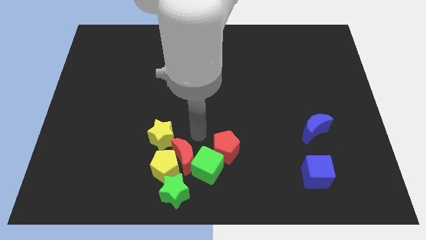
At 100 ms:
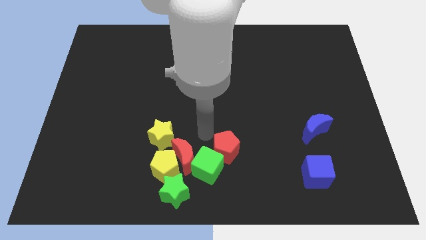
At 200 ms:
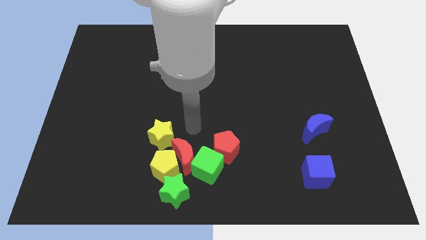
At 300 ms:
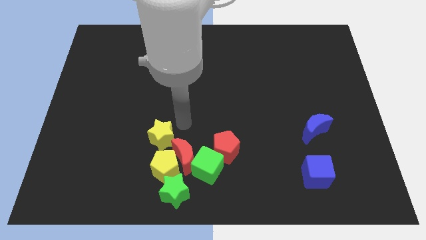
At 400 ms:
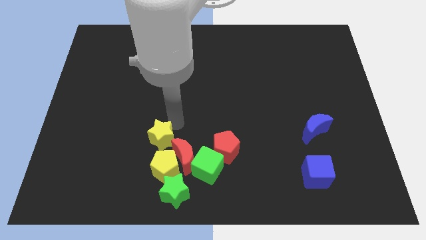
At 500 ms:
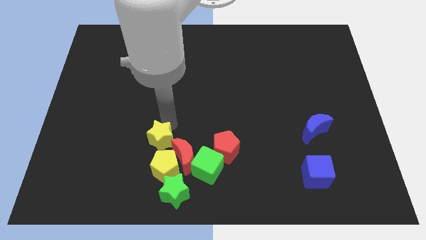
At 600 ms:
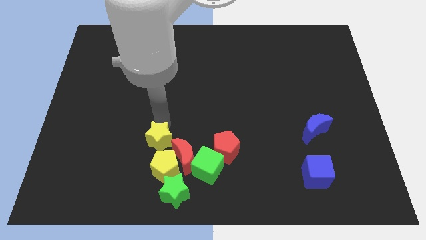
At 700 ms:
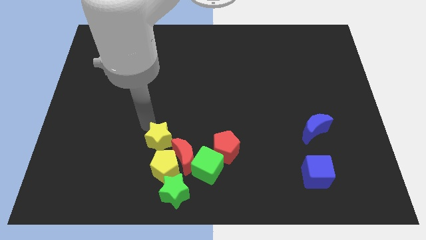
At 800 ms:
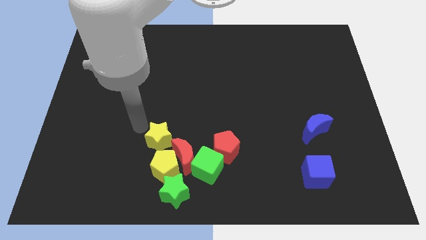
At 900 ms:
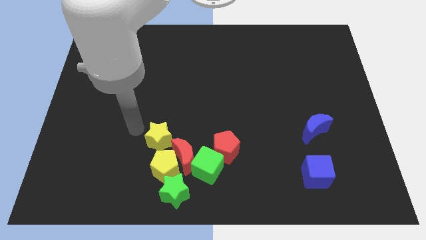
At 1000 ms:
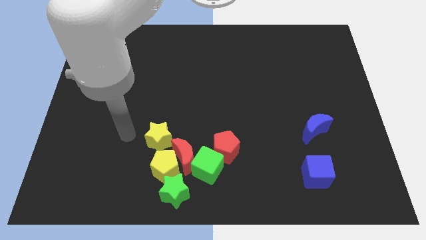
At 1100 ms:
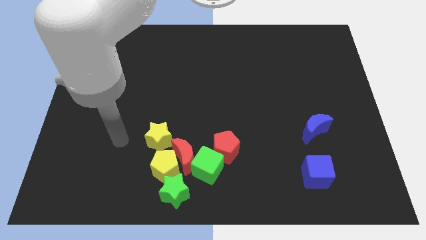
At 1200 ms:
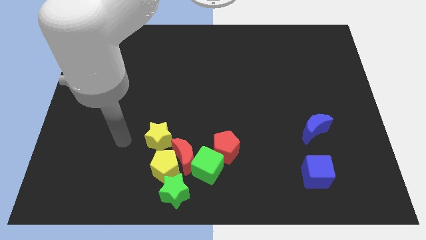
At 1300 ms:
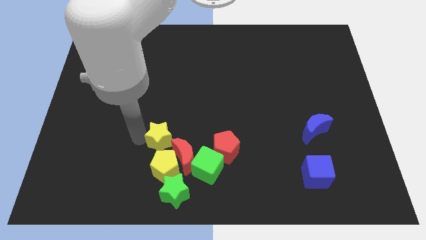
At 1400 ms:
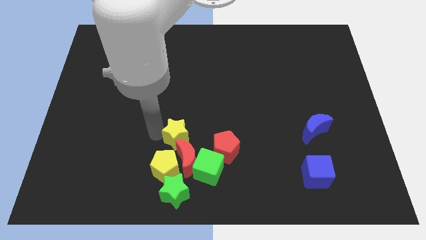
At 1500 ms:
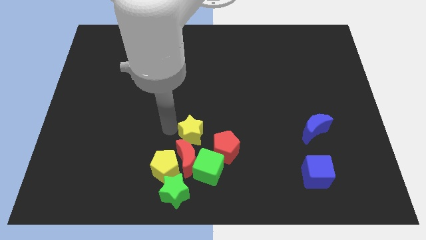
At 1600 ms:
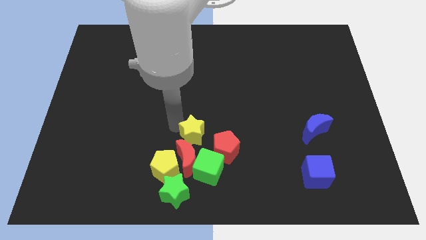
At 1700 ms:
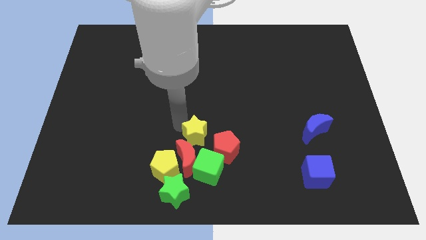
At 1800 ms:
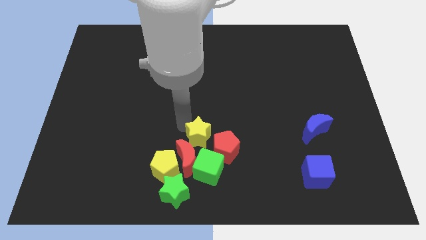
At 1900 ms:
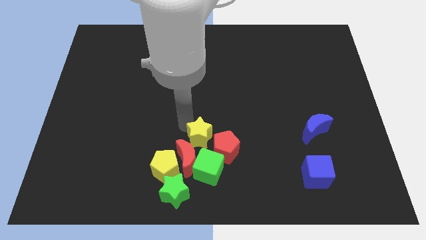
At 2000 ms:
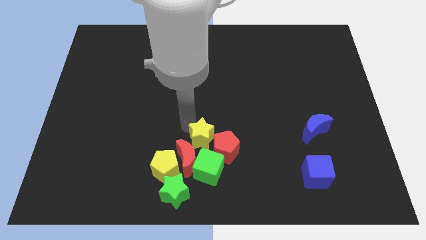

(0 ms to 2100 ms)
slide the yellow star to top left of red crescent

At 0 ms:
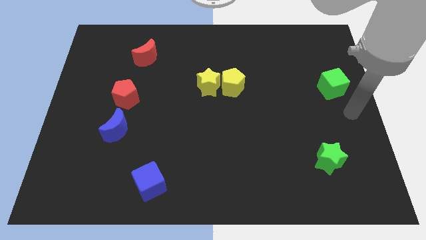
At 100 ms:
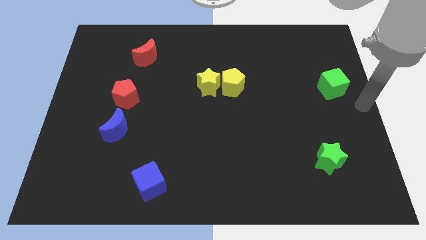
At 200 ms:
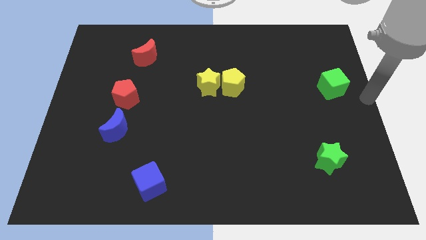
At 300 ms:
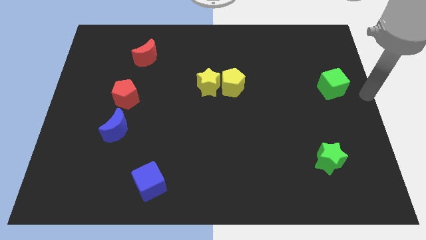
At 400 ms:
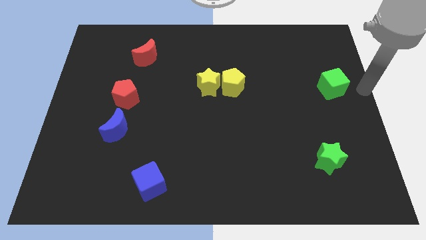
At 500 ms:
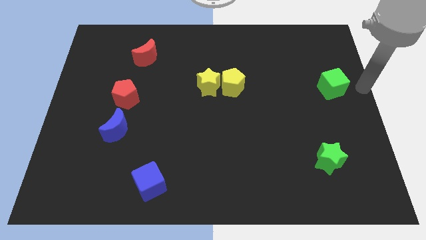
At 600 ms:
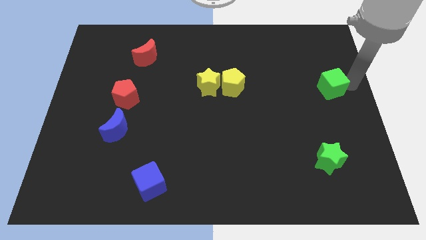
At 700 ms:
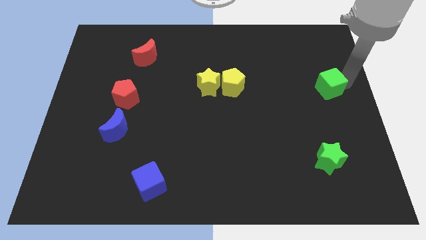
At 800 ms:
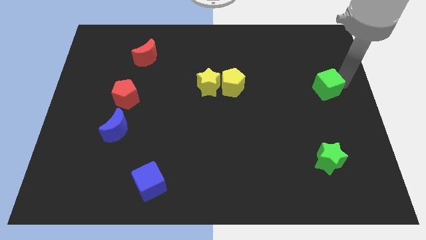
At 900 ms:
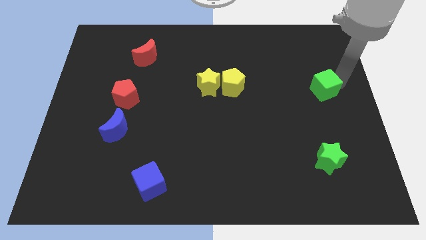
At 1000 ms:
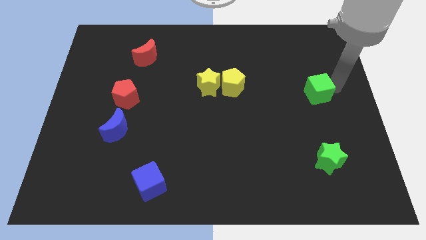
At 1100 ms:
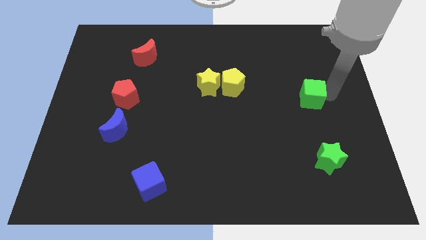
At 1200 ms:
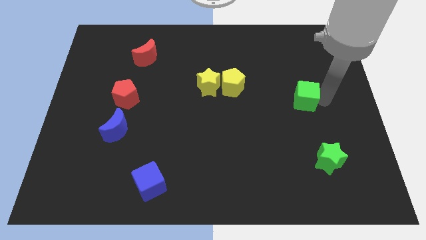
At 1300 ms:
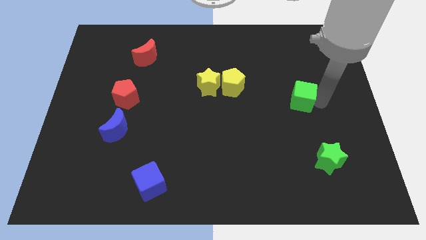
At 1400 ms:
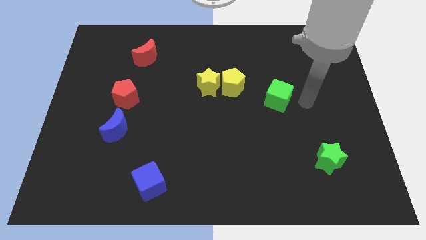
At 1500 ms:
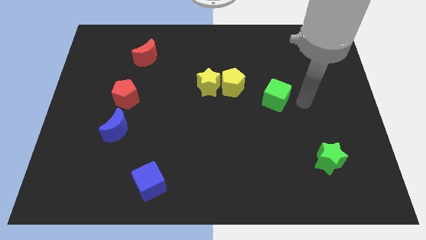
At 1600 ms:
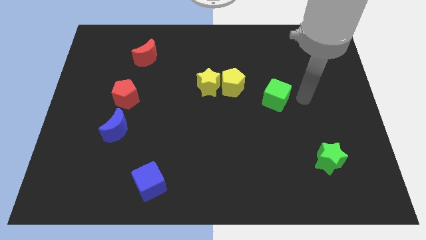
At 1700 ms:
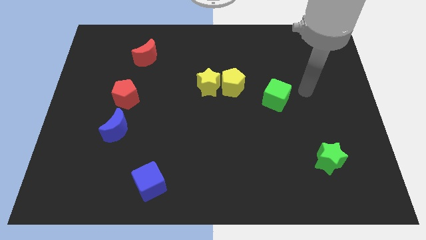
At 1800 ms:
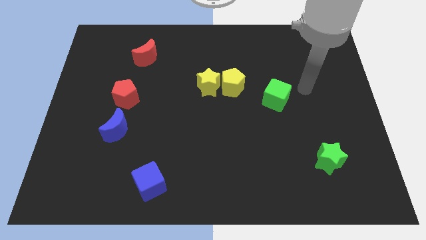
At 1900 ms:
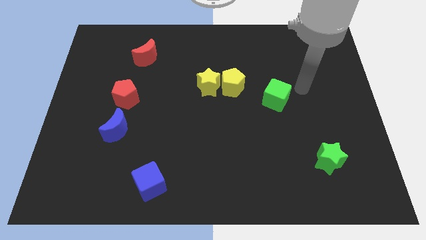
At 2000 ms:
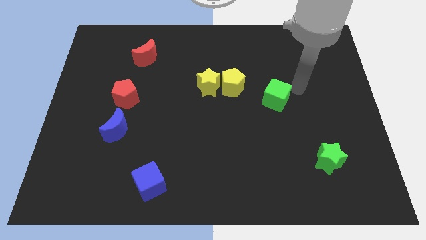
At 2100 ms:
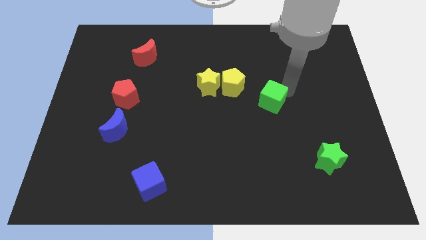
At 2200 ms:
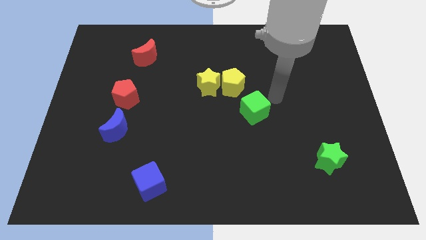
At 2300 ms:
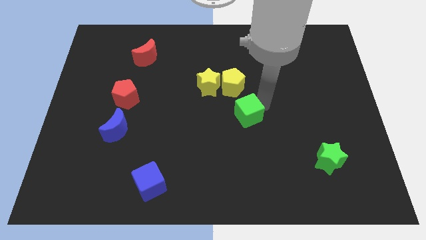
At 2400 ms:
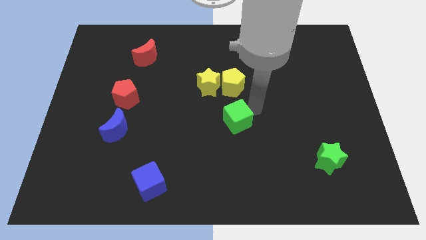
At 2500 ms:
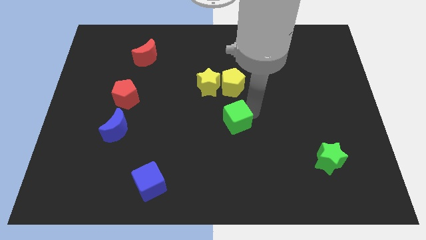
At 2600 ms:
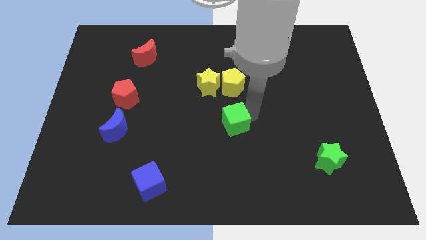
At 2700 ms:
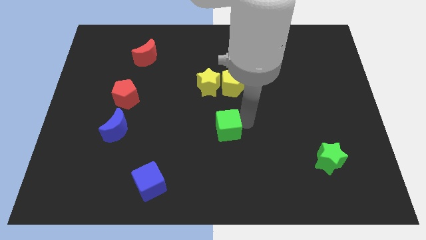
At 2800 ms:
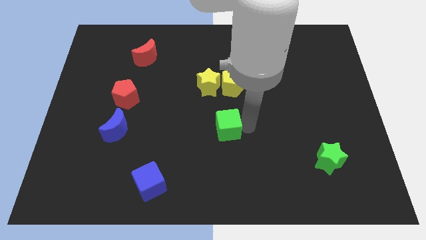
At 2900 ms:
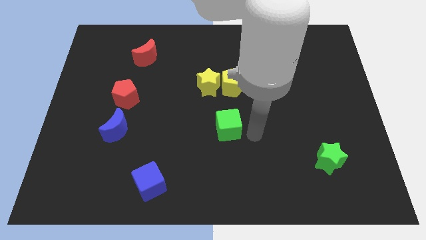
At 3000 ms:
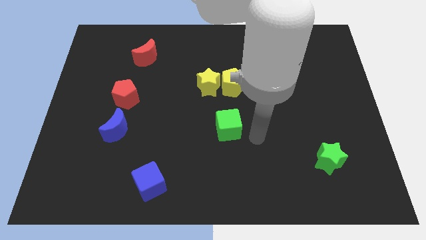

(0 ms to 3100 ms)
place the blue cube below the group of yellow blocks

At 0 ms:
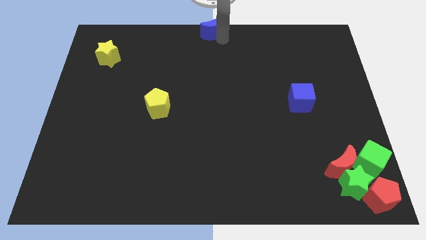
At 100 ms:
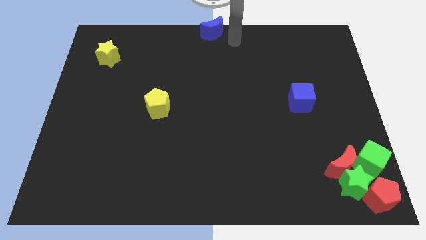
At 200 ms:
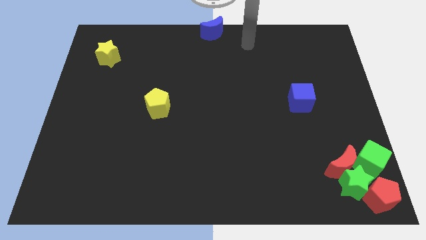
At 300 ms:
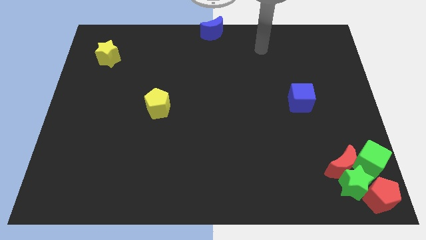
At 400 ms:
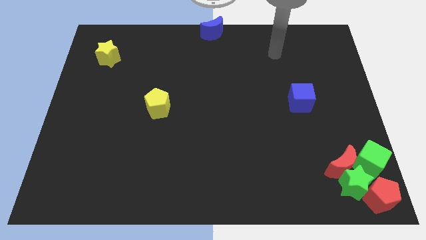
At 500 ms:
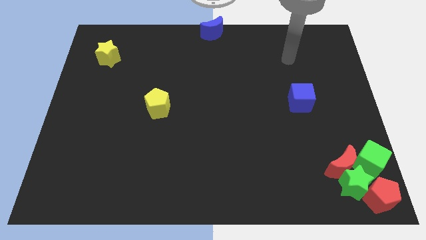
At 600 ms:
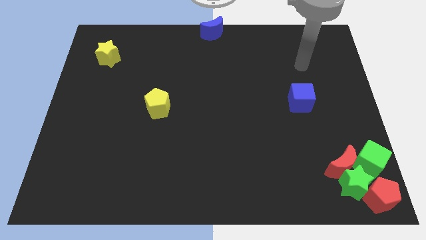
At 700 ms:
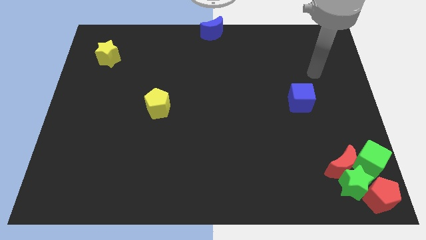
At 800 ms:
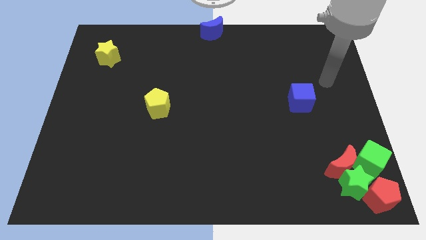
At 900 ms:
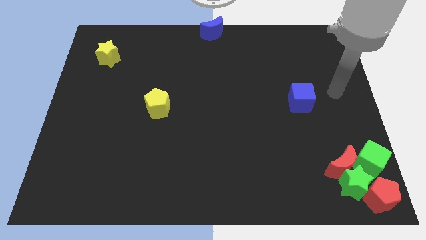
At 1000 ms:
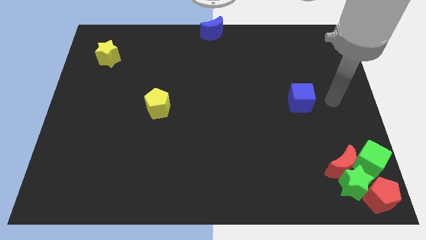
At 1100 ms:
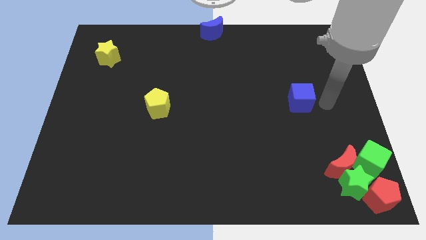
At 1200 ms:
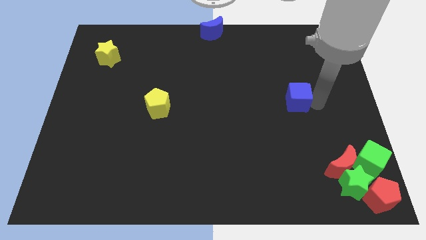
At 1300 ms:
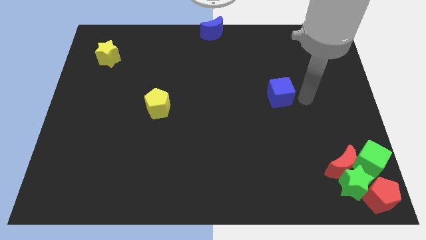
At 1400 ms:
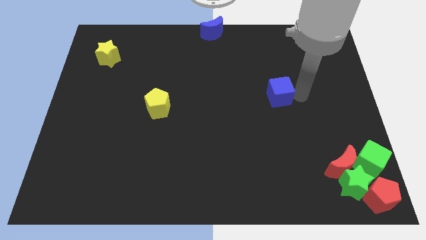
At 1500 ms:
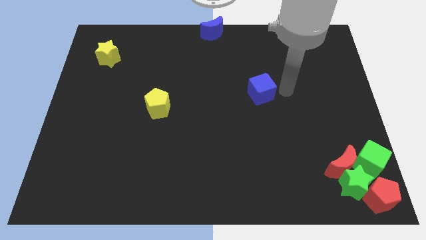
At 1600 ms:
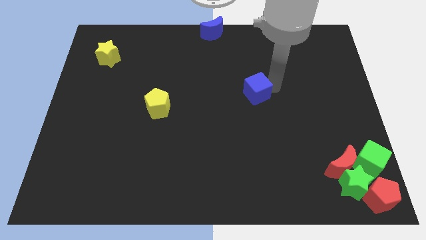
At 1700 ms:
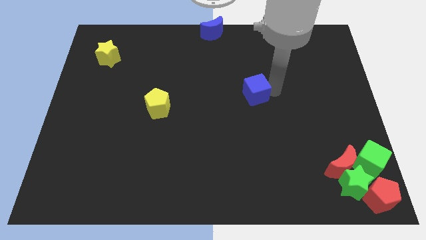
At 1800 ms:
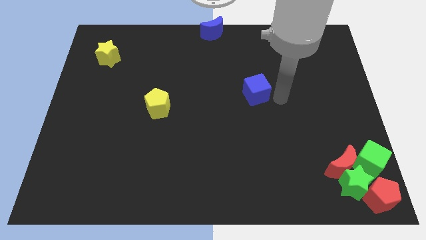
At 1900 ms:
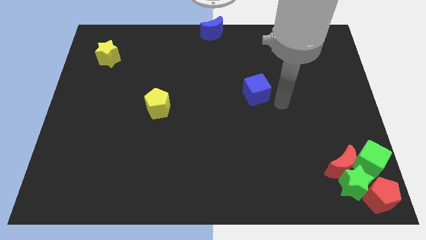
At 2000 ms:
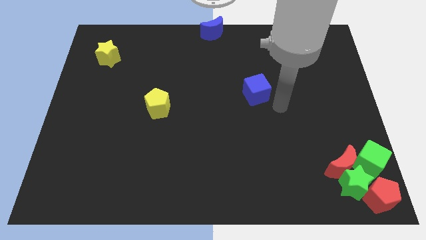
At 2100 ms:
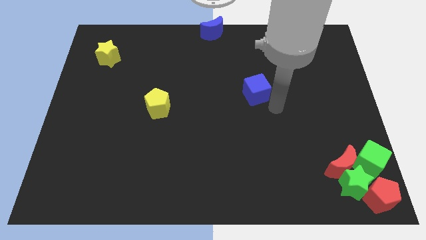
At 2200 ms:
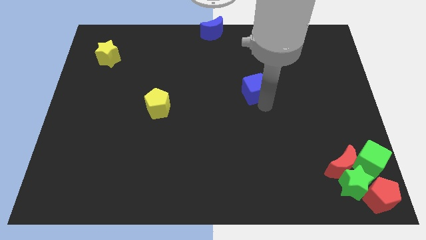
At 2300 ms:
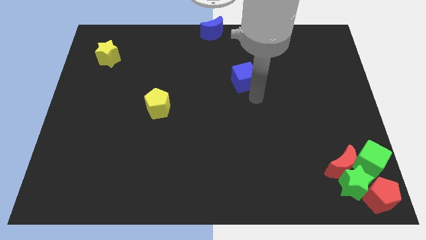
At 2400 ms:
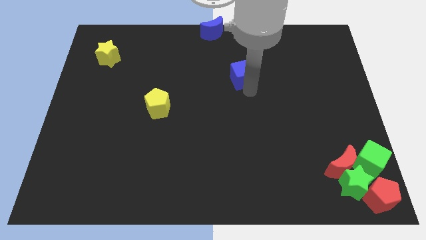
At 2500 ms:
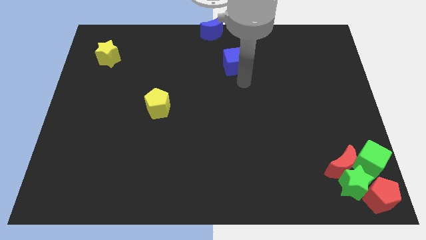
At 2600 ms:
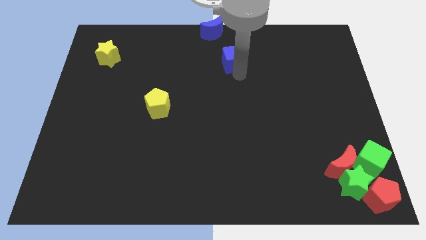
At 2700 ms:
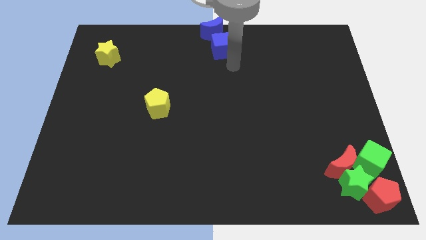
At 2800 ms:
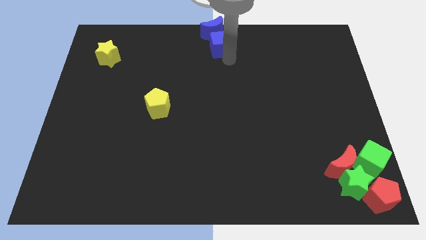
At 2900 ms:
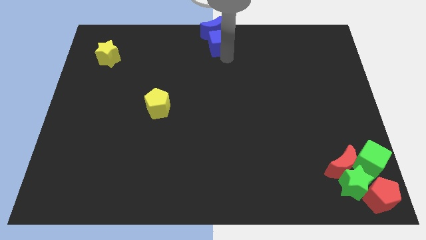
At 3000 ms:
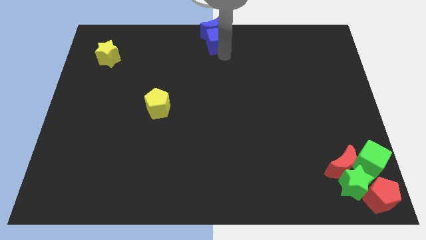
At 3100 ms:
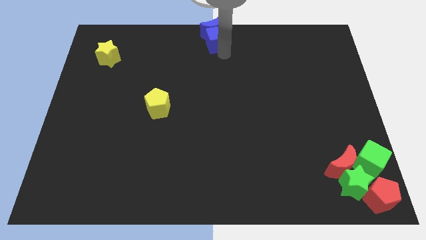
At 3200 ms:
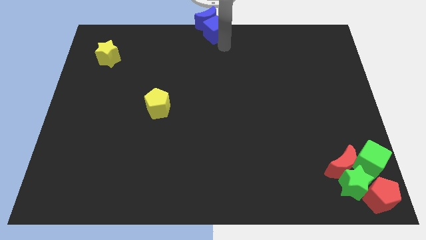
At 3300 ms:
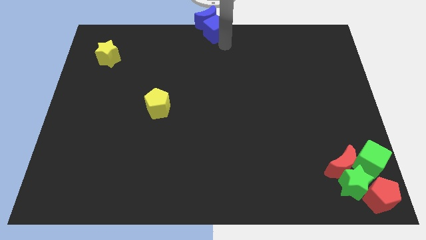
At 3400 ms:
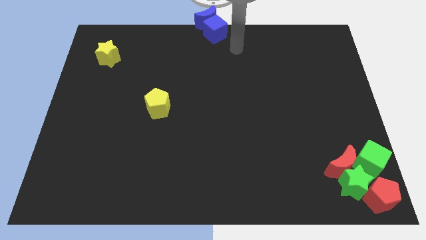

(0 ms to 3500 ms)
push the blue cube into the blue crescent

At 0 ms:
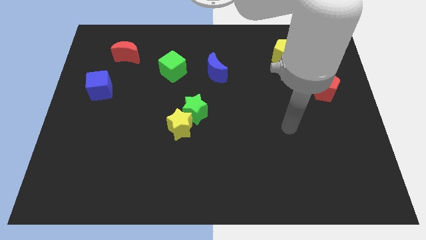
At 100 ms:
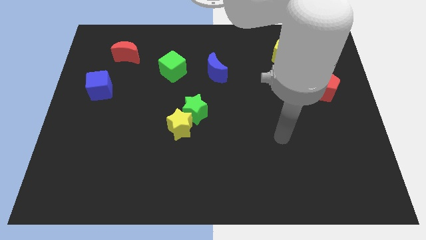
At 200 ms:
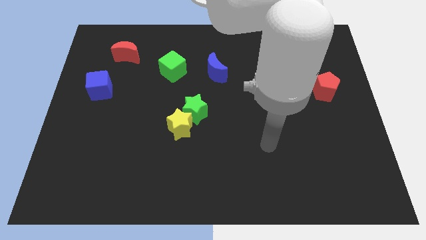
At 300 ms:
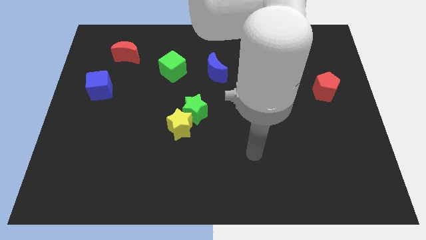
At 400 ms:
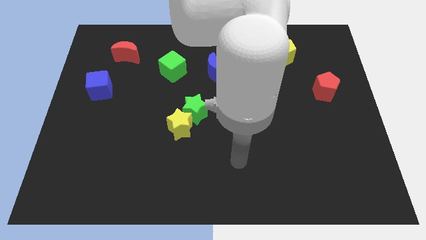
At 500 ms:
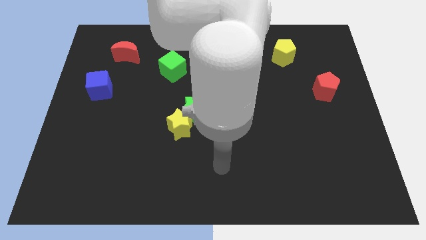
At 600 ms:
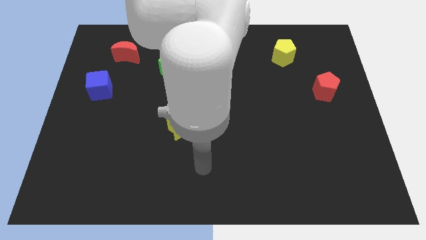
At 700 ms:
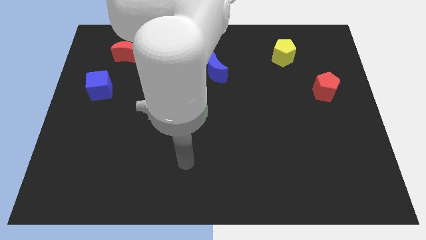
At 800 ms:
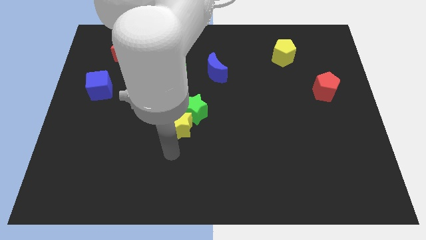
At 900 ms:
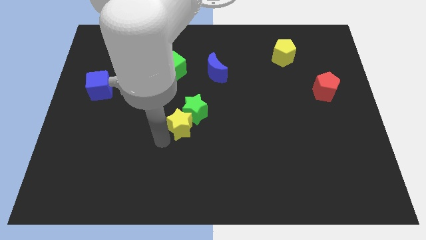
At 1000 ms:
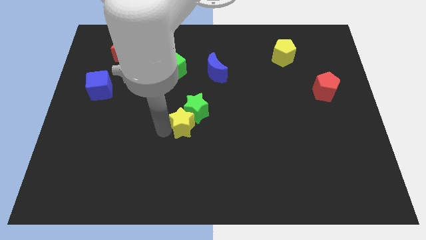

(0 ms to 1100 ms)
move your arm towards the yellow star
